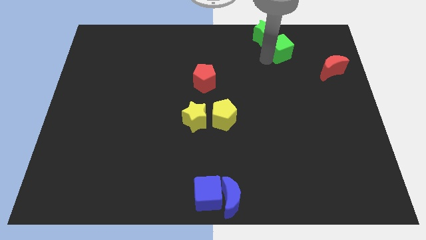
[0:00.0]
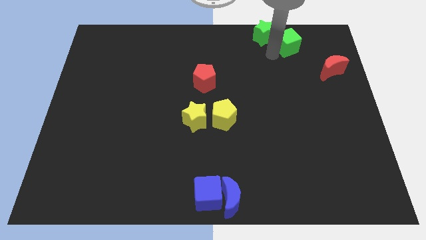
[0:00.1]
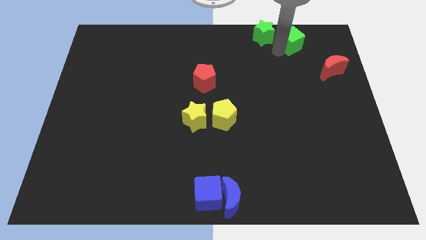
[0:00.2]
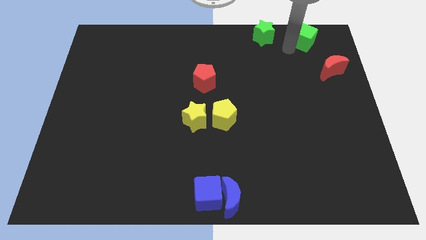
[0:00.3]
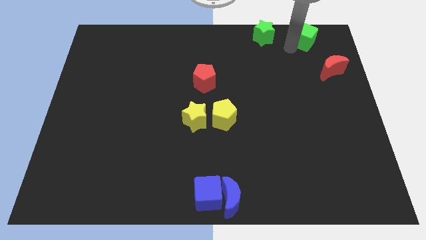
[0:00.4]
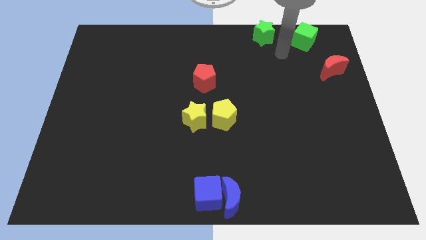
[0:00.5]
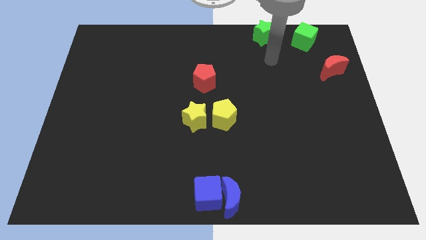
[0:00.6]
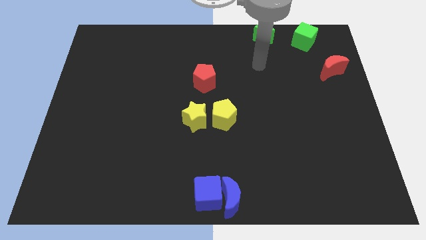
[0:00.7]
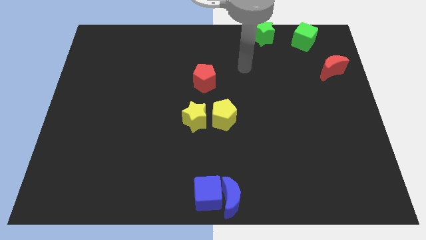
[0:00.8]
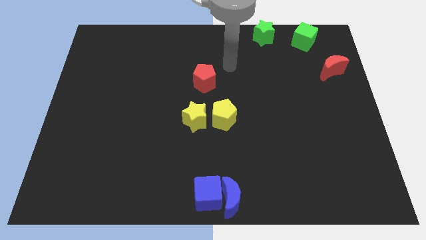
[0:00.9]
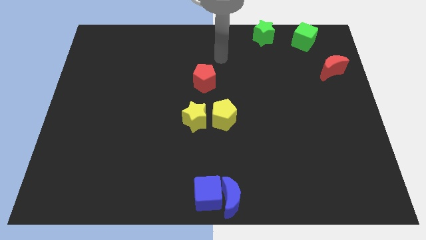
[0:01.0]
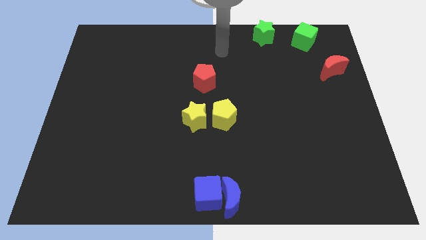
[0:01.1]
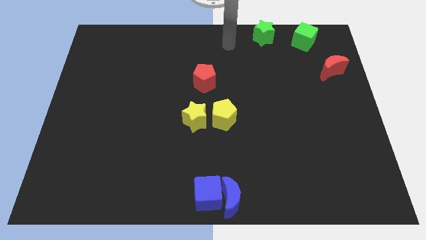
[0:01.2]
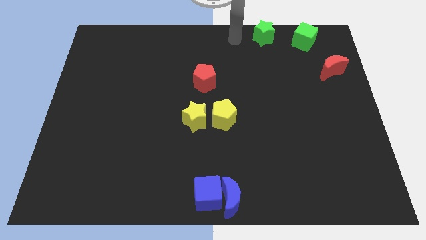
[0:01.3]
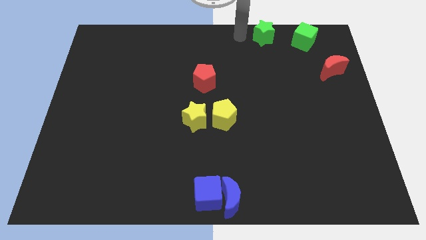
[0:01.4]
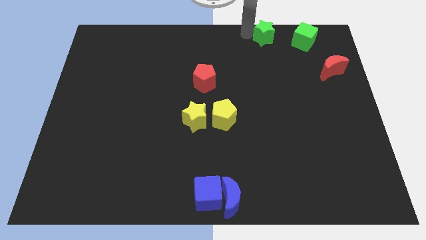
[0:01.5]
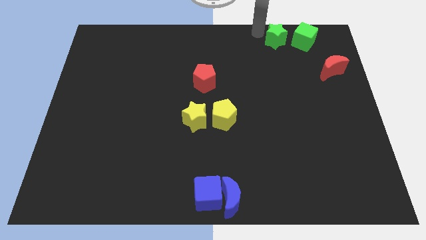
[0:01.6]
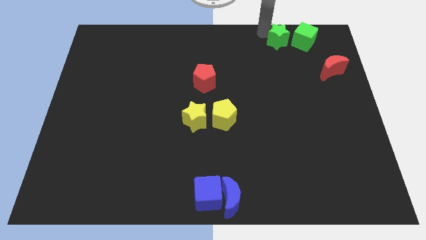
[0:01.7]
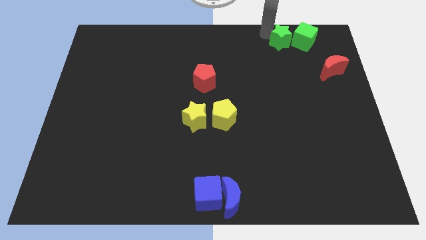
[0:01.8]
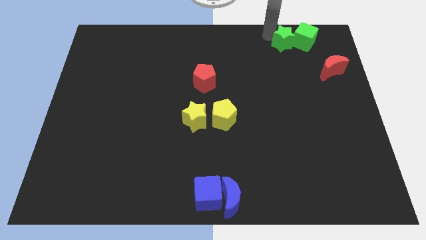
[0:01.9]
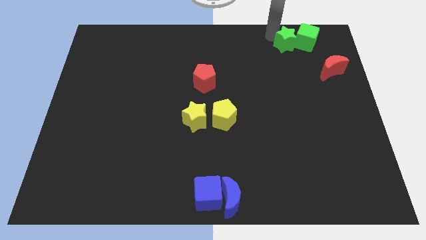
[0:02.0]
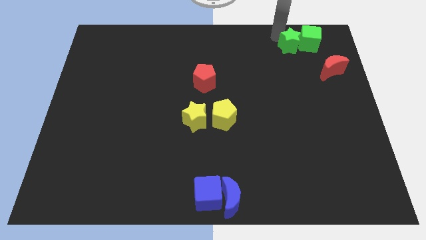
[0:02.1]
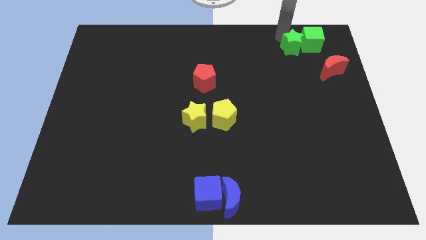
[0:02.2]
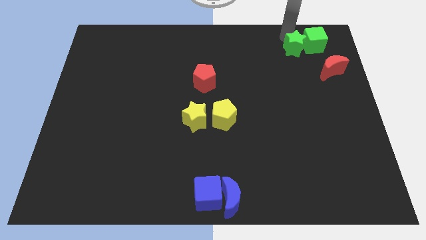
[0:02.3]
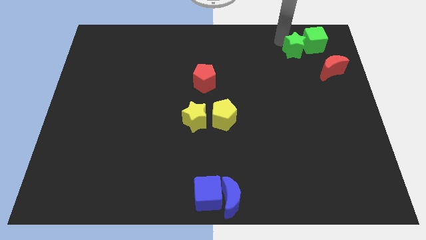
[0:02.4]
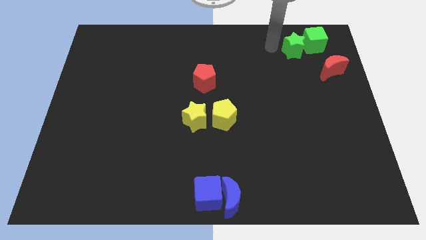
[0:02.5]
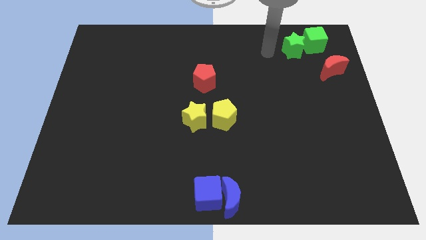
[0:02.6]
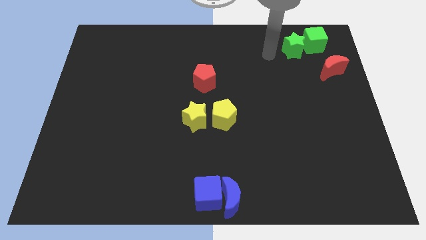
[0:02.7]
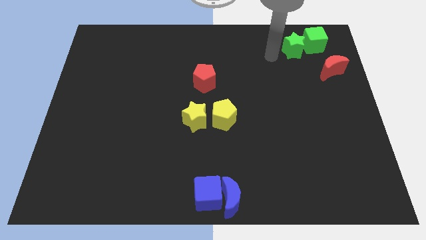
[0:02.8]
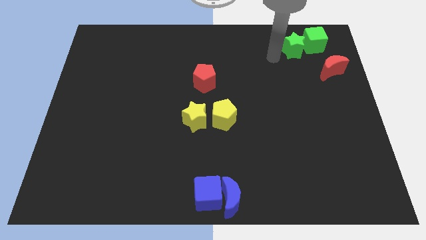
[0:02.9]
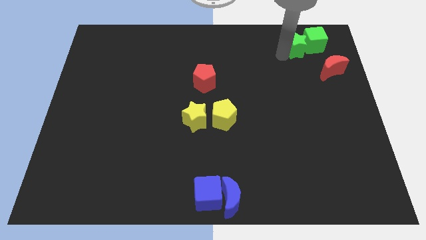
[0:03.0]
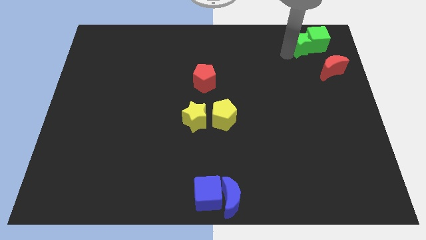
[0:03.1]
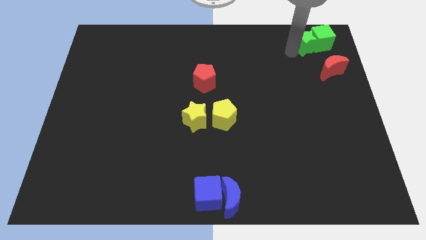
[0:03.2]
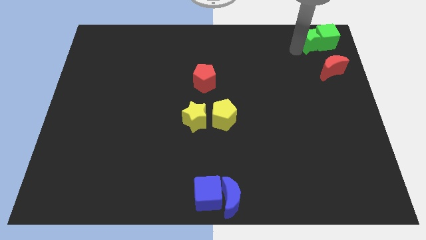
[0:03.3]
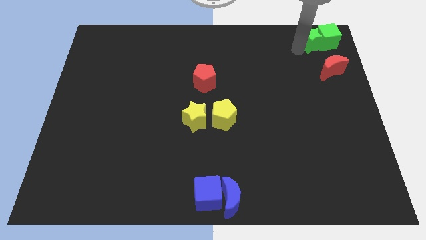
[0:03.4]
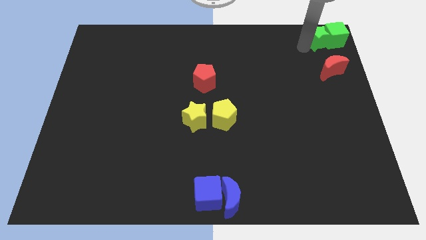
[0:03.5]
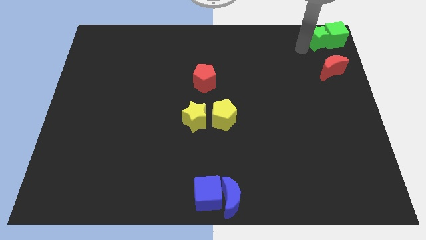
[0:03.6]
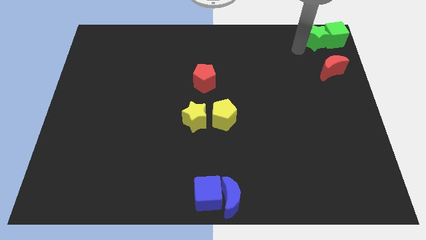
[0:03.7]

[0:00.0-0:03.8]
place green star and green cube to the top right corner of the board

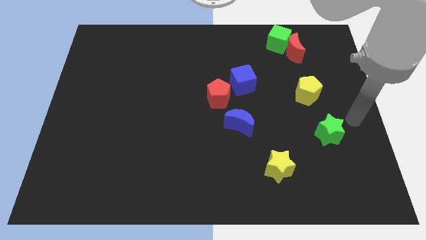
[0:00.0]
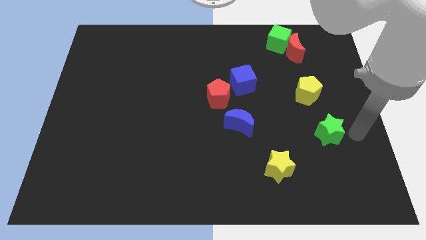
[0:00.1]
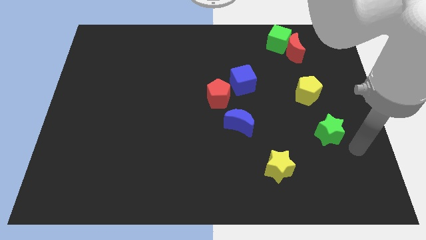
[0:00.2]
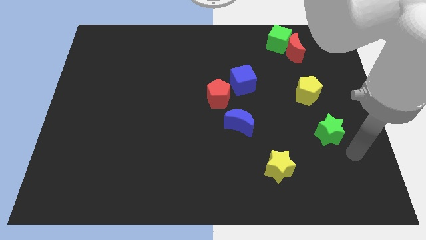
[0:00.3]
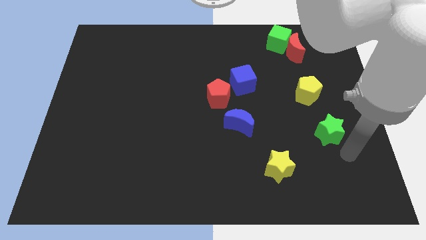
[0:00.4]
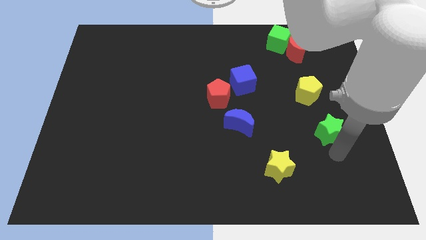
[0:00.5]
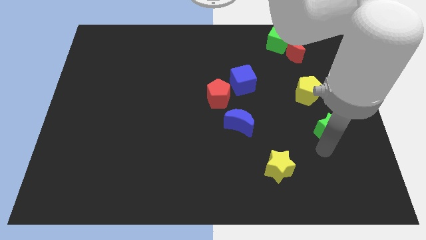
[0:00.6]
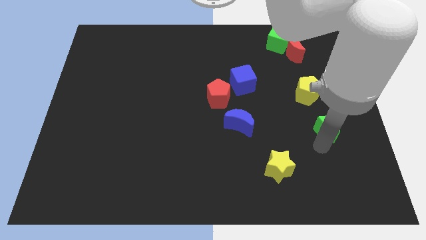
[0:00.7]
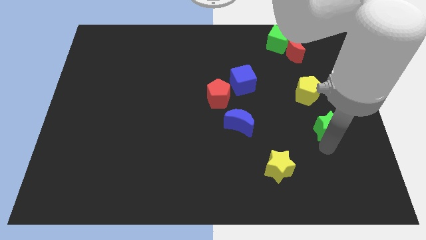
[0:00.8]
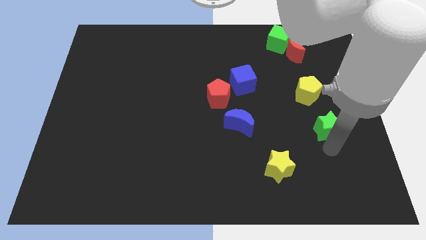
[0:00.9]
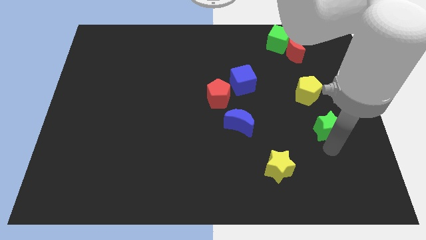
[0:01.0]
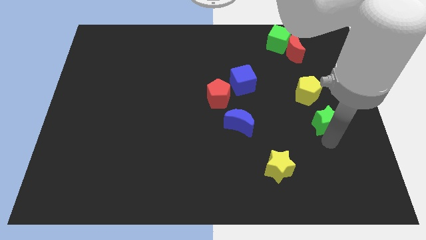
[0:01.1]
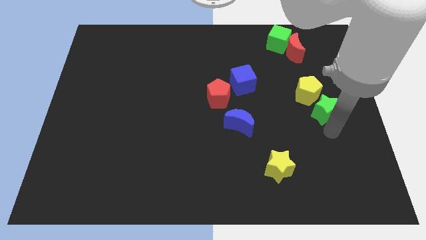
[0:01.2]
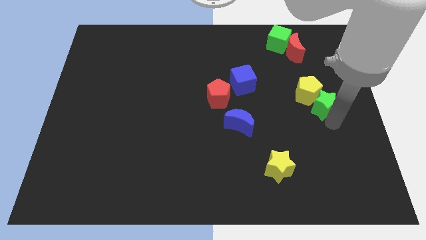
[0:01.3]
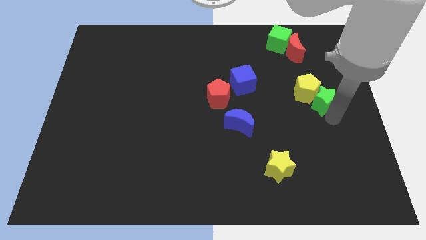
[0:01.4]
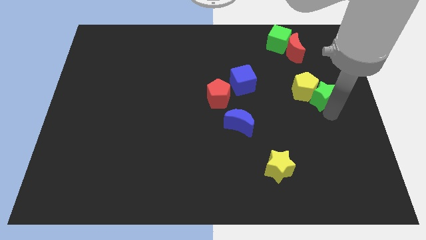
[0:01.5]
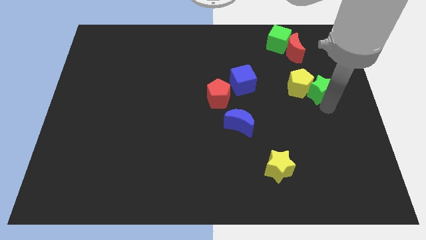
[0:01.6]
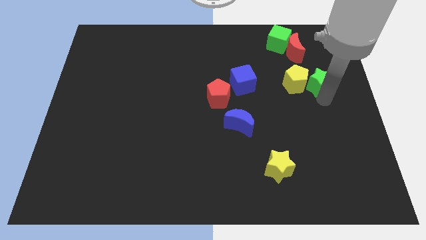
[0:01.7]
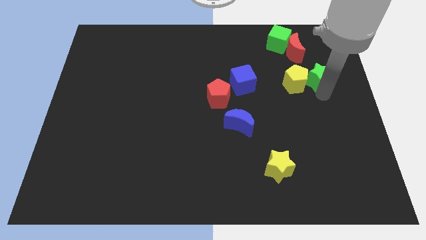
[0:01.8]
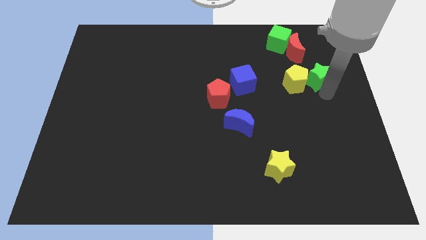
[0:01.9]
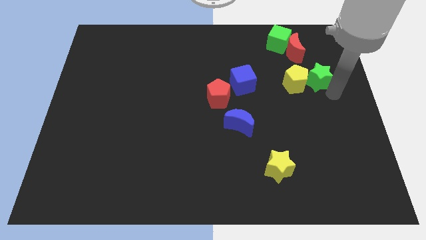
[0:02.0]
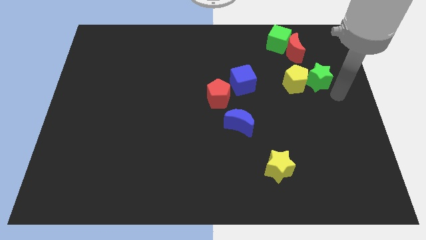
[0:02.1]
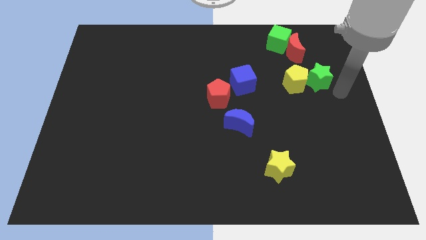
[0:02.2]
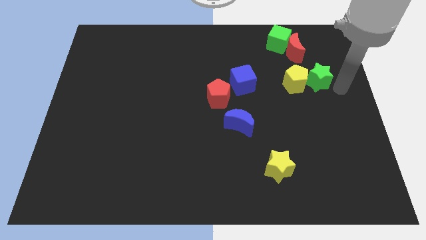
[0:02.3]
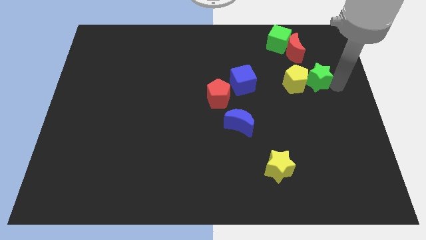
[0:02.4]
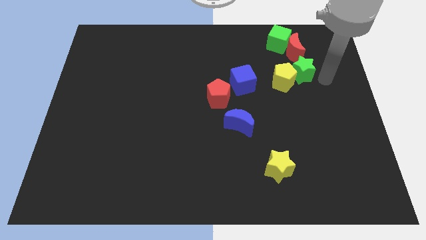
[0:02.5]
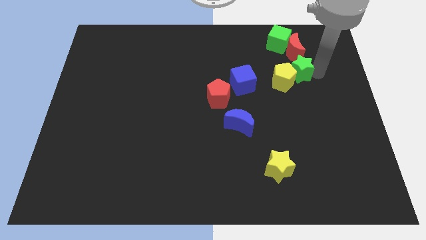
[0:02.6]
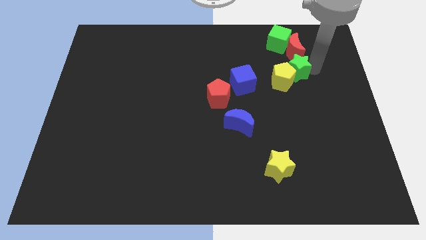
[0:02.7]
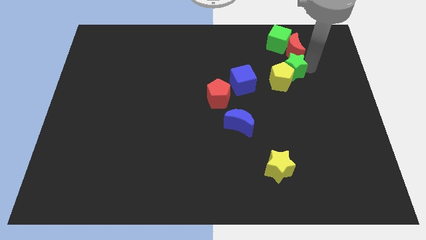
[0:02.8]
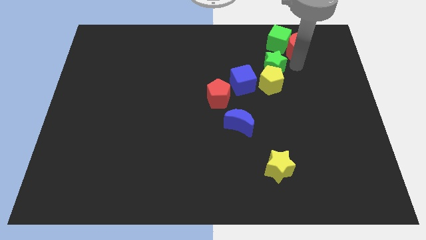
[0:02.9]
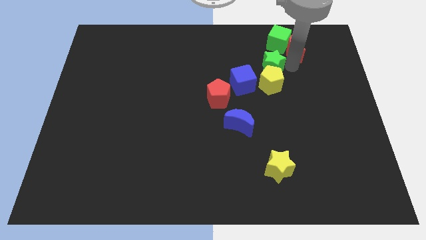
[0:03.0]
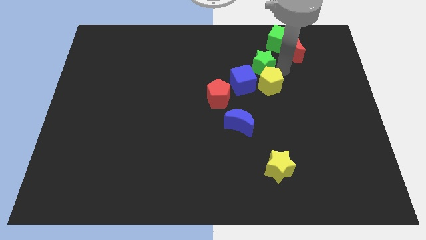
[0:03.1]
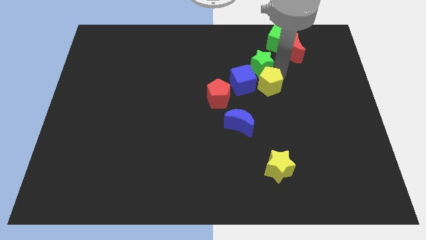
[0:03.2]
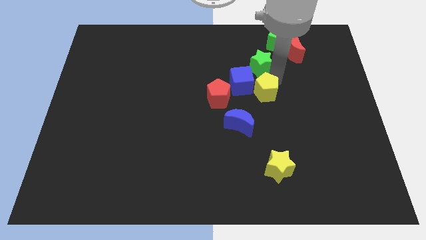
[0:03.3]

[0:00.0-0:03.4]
place the green star above the yellow pentagon

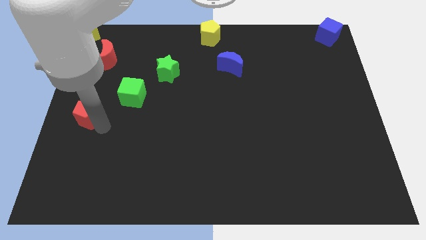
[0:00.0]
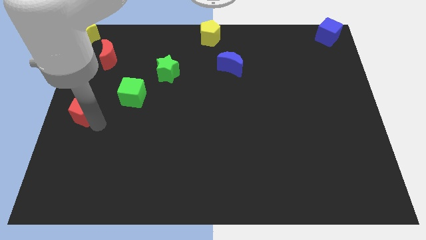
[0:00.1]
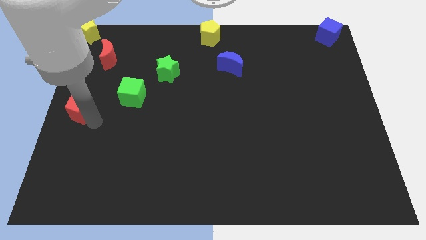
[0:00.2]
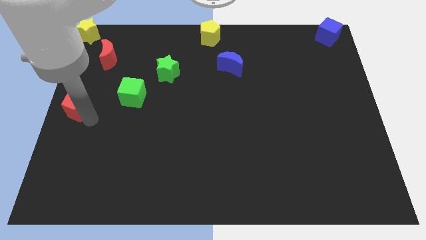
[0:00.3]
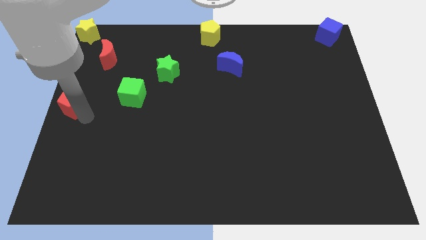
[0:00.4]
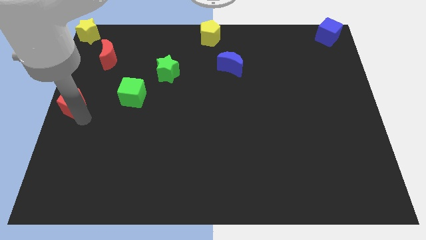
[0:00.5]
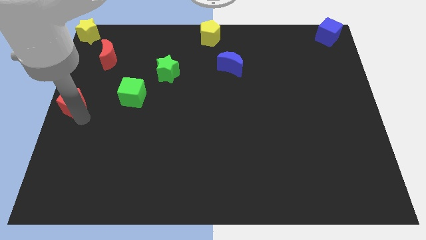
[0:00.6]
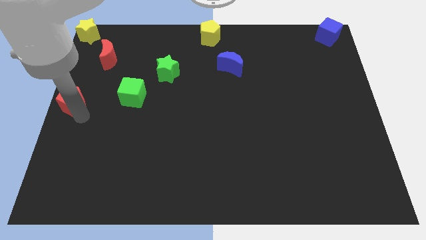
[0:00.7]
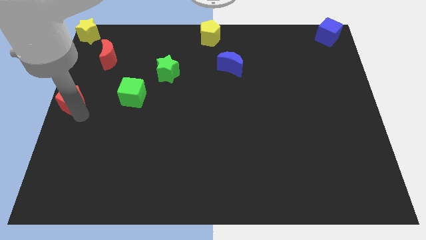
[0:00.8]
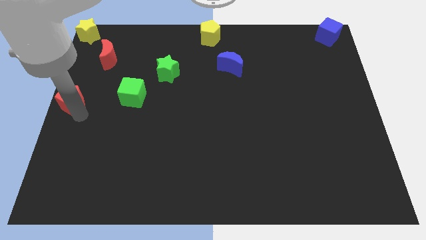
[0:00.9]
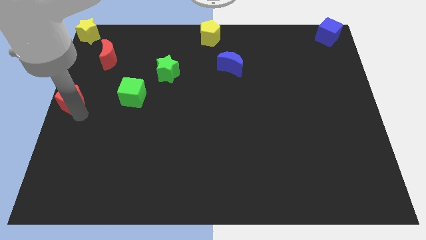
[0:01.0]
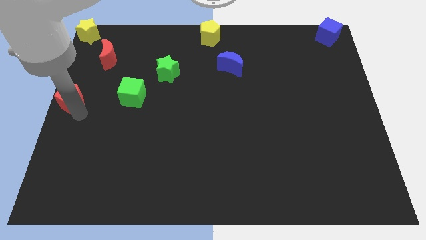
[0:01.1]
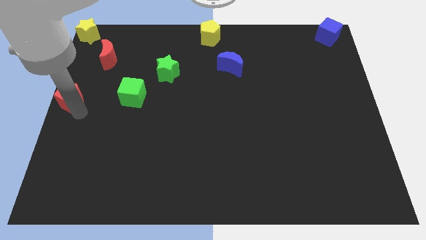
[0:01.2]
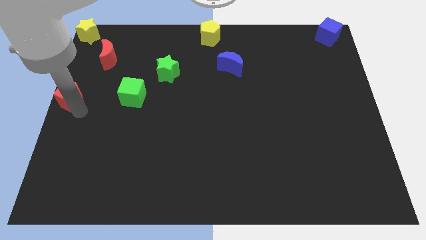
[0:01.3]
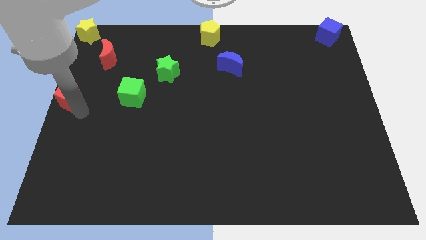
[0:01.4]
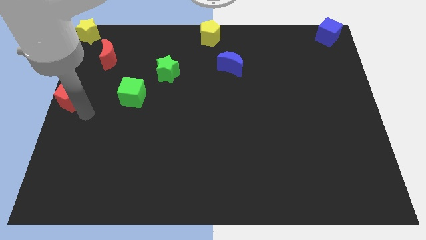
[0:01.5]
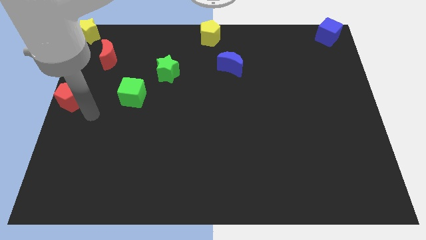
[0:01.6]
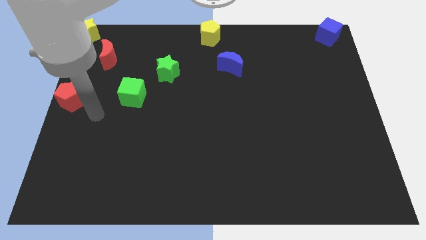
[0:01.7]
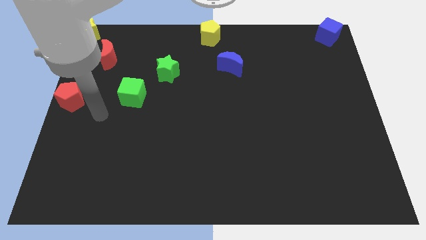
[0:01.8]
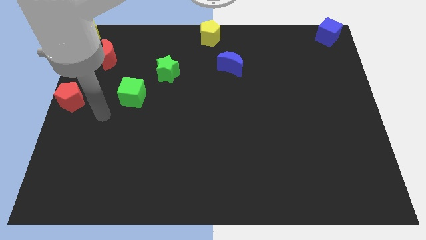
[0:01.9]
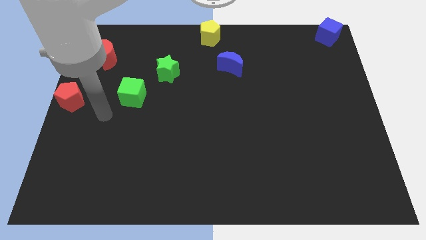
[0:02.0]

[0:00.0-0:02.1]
push the red pentagon to the left center of the board
